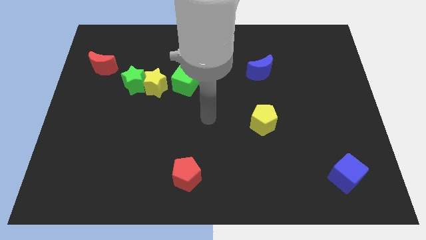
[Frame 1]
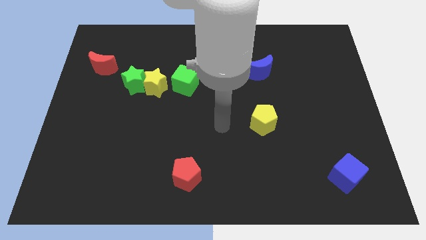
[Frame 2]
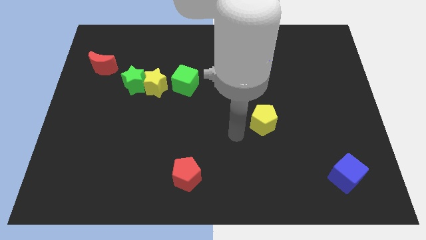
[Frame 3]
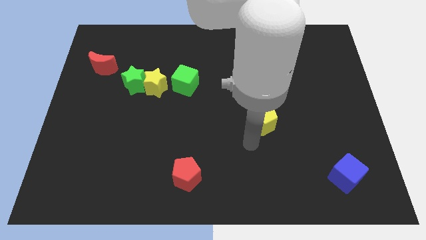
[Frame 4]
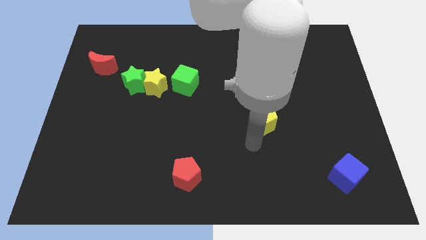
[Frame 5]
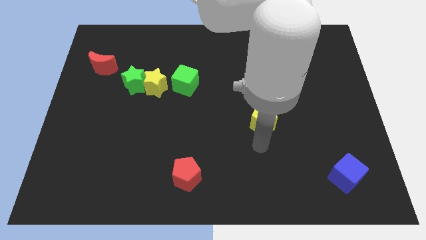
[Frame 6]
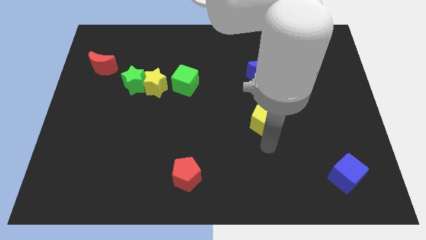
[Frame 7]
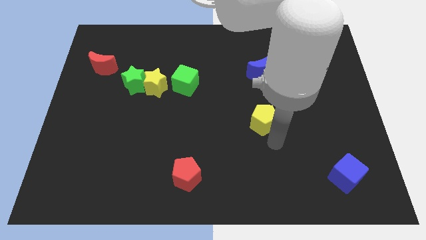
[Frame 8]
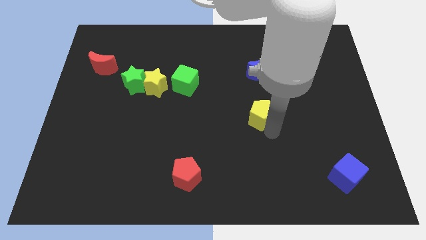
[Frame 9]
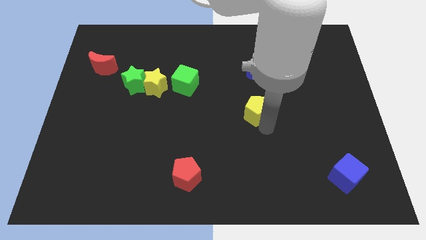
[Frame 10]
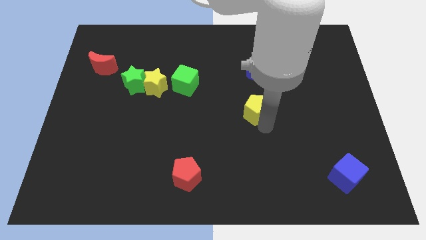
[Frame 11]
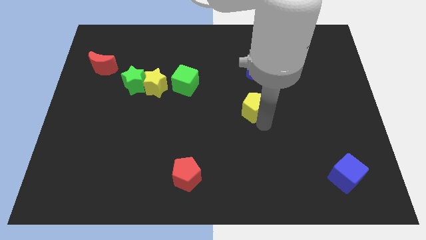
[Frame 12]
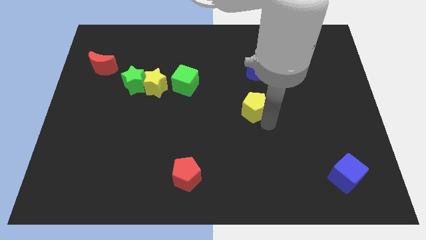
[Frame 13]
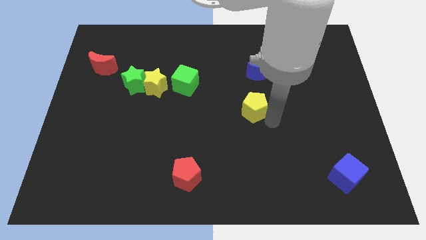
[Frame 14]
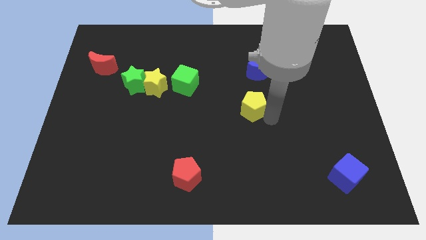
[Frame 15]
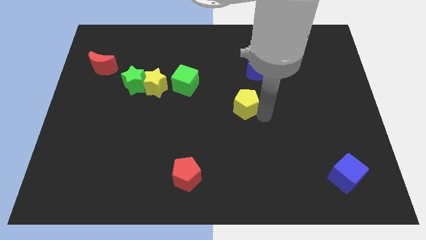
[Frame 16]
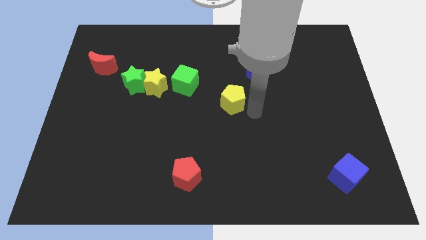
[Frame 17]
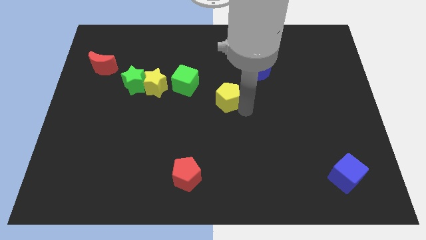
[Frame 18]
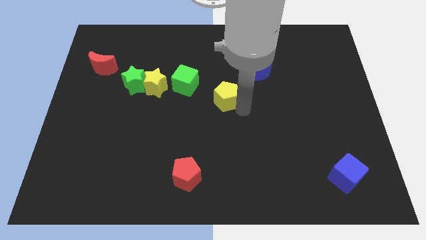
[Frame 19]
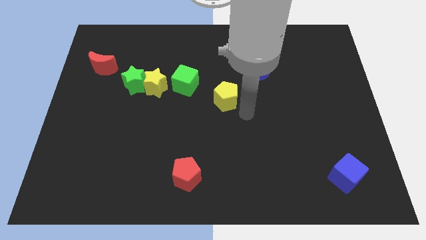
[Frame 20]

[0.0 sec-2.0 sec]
slide the yellow pentagon diagonally bottom left to the blue moon

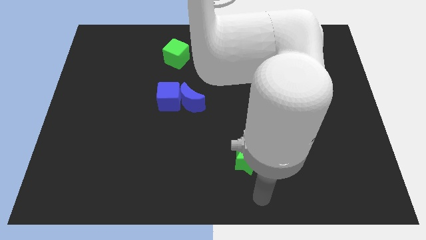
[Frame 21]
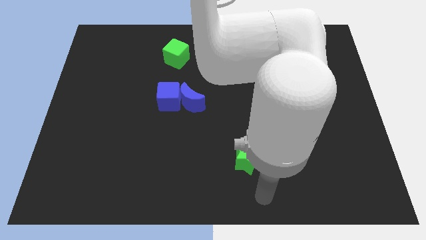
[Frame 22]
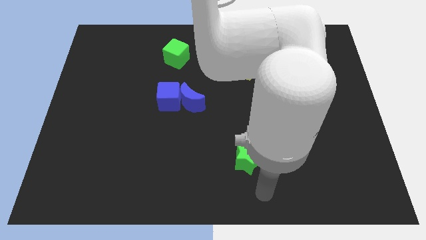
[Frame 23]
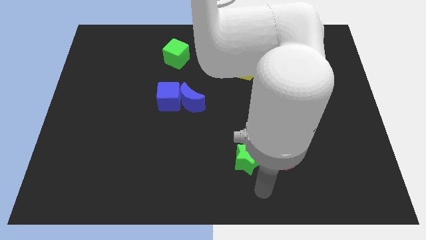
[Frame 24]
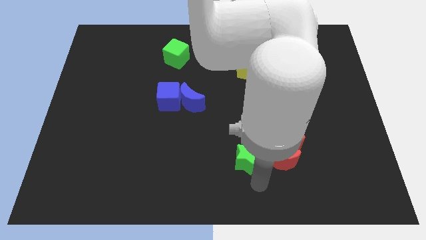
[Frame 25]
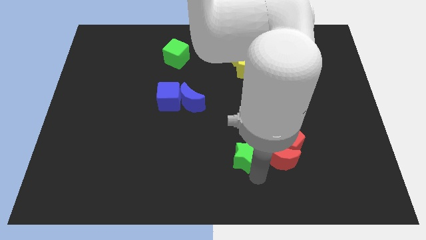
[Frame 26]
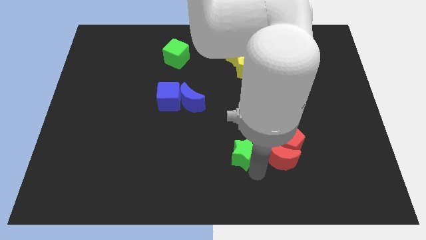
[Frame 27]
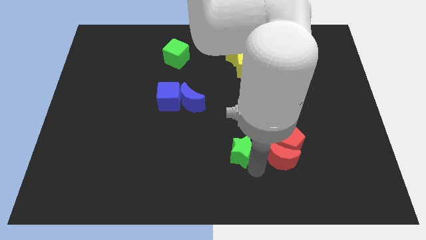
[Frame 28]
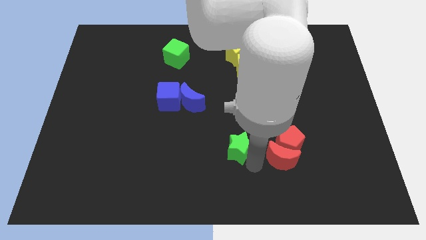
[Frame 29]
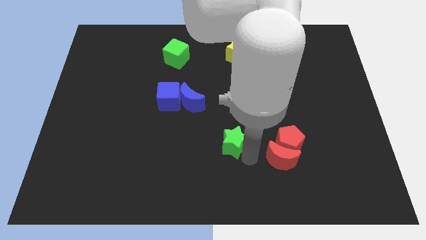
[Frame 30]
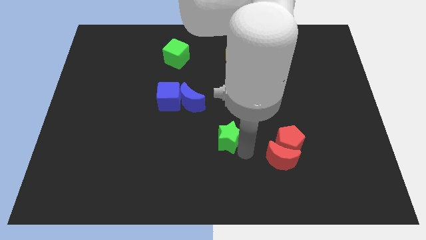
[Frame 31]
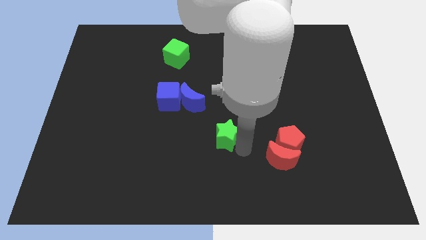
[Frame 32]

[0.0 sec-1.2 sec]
move green star to the top

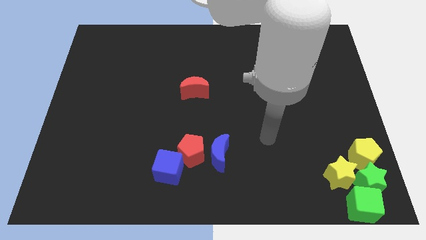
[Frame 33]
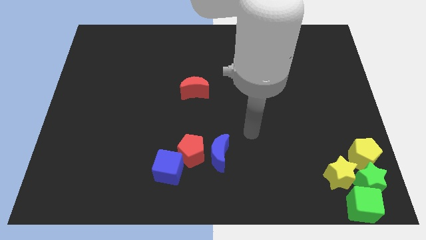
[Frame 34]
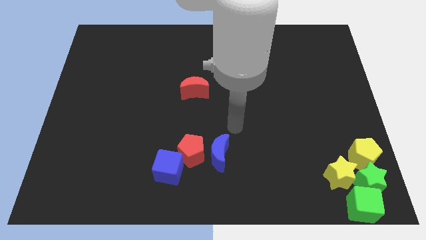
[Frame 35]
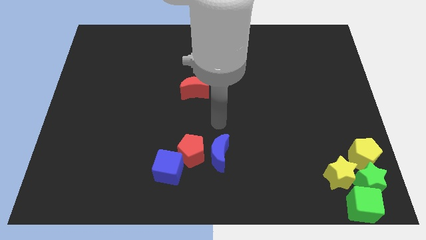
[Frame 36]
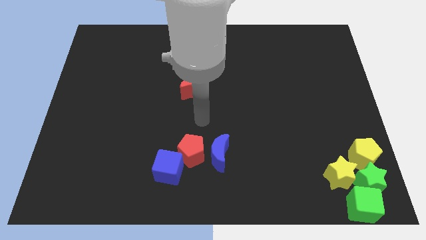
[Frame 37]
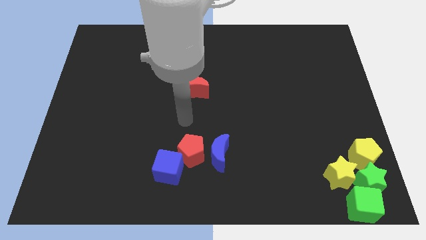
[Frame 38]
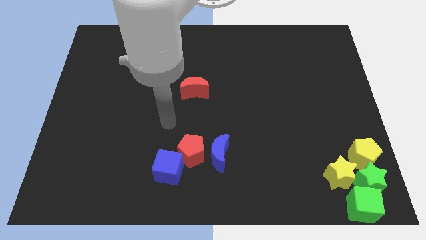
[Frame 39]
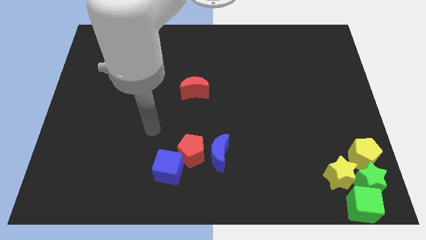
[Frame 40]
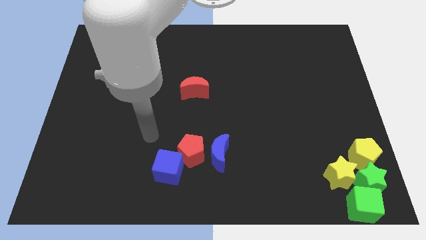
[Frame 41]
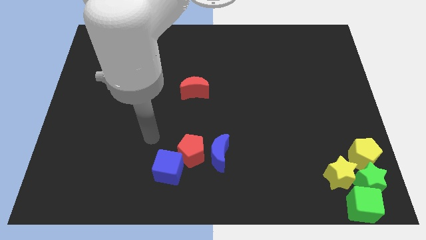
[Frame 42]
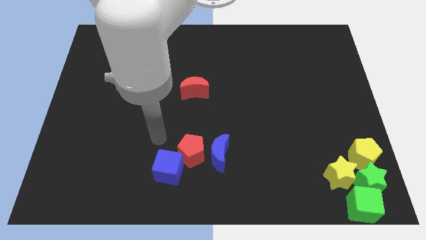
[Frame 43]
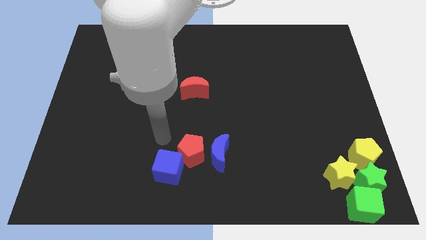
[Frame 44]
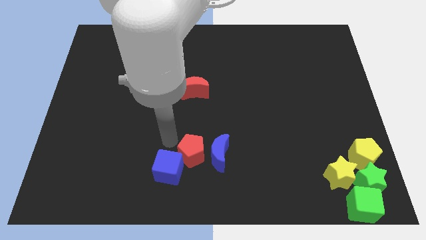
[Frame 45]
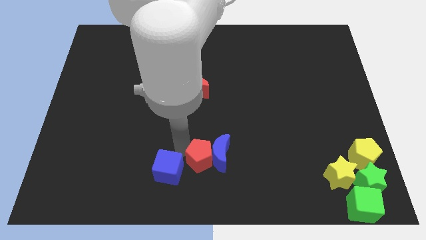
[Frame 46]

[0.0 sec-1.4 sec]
move your arm to top of the red pentagon

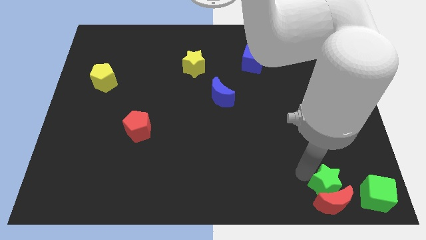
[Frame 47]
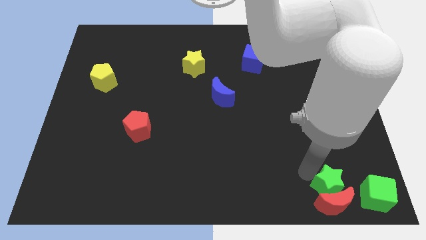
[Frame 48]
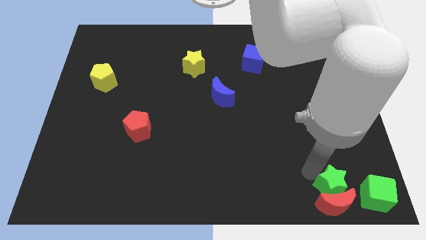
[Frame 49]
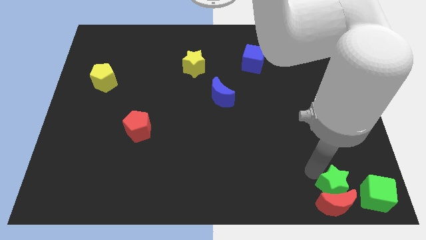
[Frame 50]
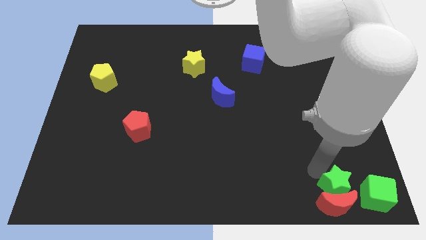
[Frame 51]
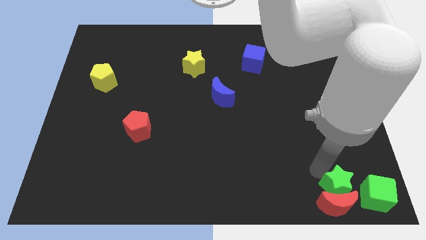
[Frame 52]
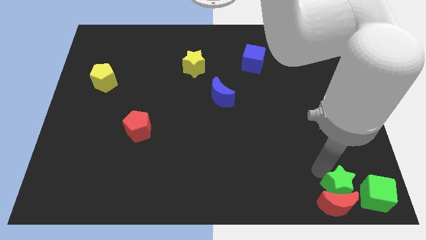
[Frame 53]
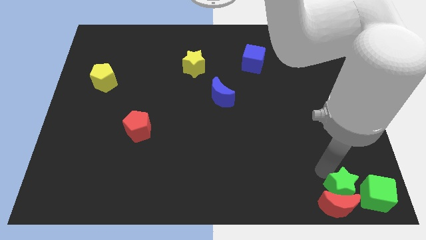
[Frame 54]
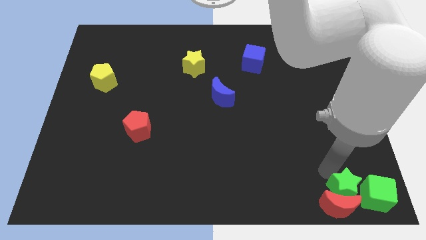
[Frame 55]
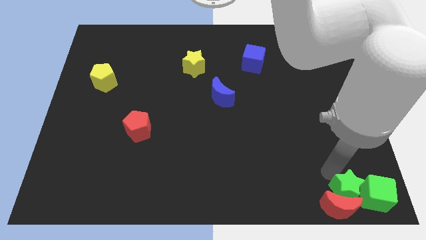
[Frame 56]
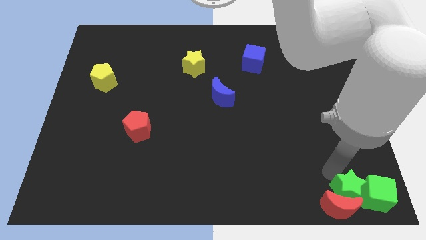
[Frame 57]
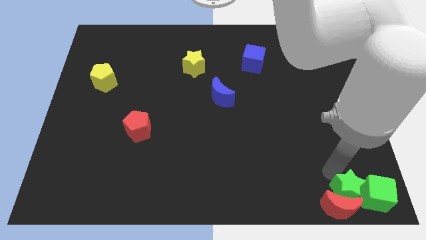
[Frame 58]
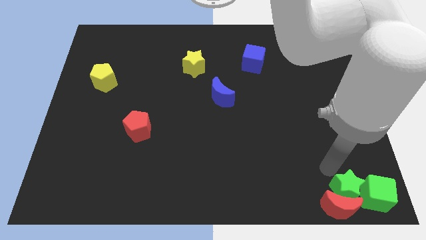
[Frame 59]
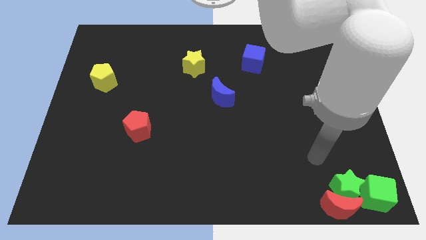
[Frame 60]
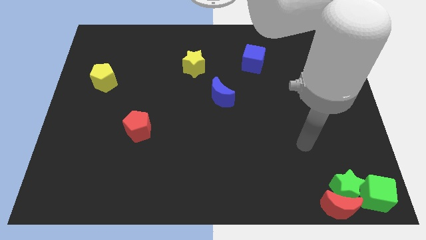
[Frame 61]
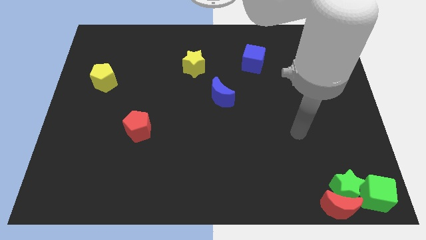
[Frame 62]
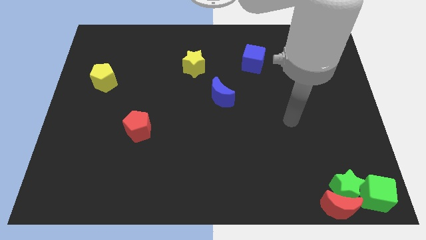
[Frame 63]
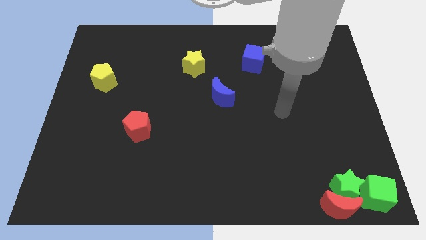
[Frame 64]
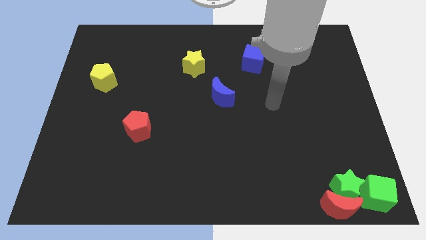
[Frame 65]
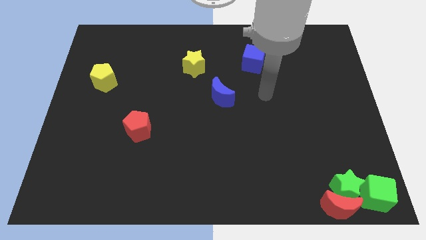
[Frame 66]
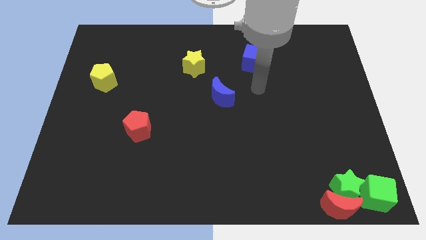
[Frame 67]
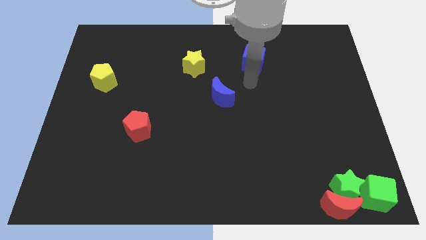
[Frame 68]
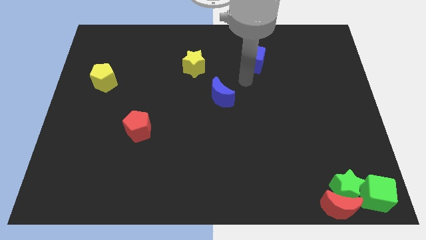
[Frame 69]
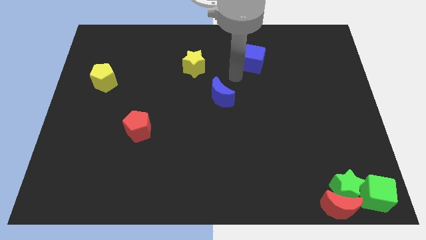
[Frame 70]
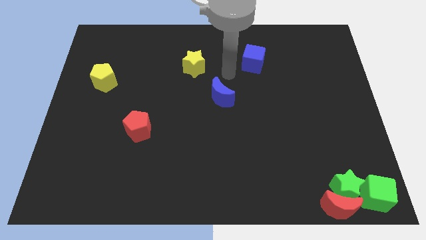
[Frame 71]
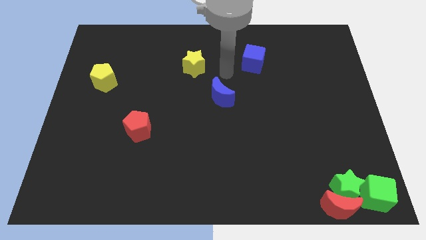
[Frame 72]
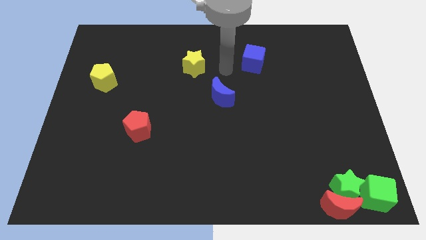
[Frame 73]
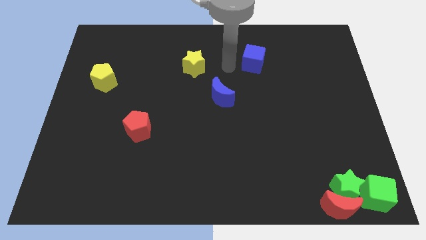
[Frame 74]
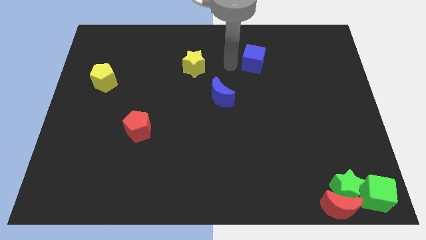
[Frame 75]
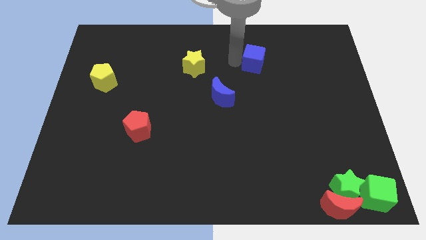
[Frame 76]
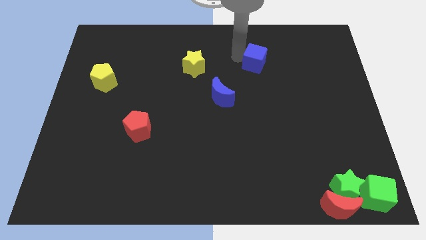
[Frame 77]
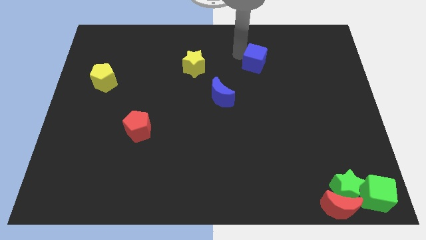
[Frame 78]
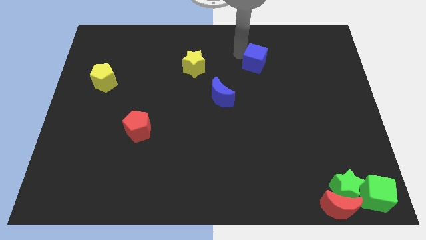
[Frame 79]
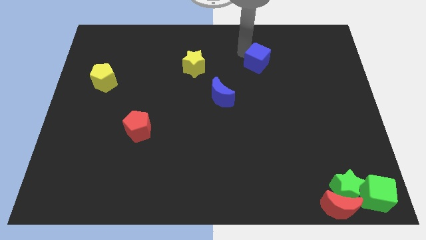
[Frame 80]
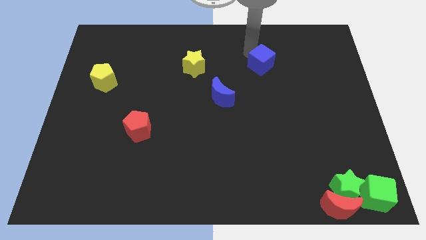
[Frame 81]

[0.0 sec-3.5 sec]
move your arm to the blue cube

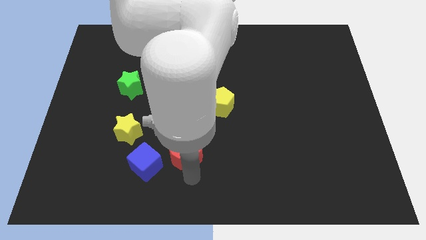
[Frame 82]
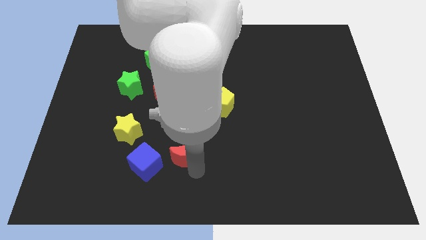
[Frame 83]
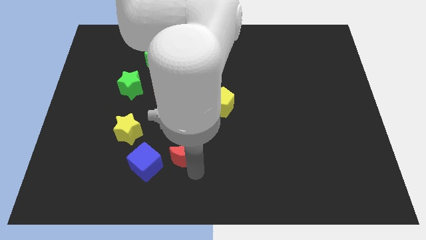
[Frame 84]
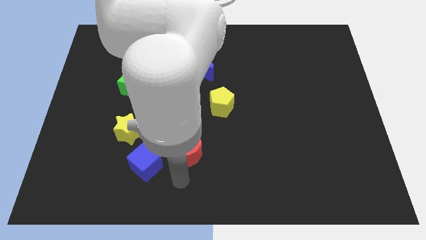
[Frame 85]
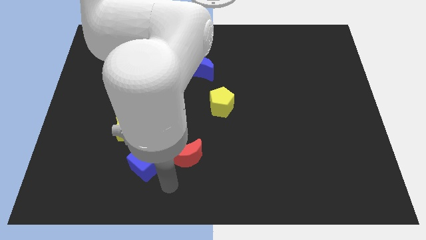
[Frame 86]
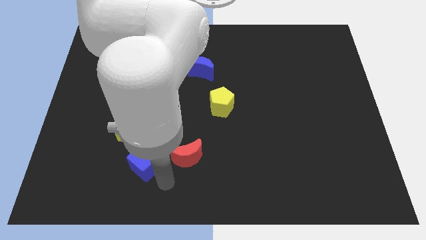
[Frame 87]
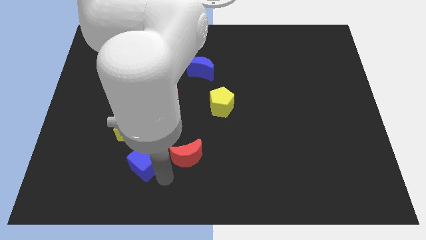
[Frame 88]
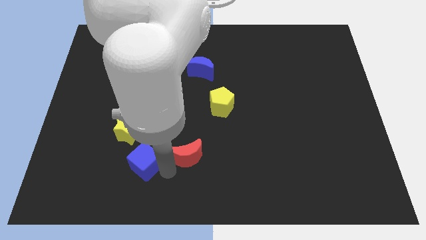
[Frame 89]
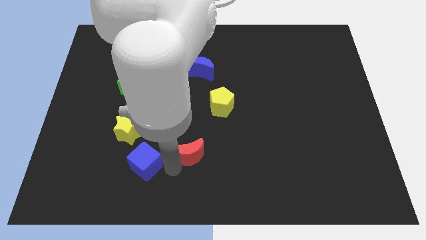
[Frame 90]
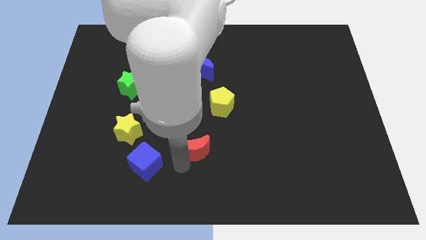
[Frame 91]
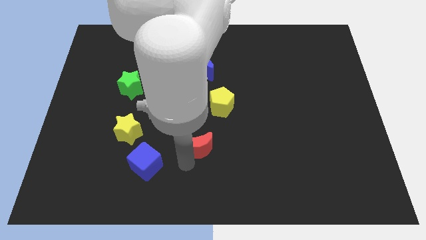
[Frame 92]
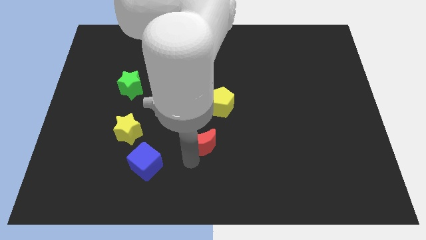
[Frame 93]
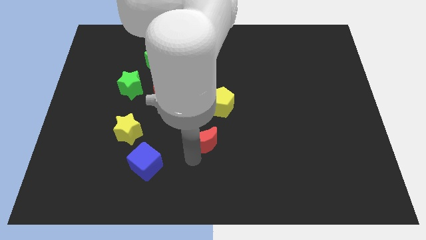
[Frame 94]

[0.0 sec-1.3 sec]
push the red moon diagonally bottom left to yellow pentagon
